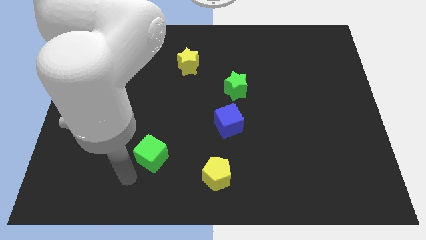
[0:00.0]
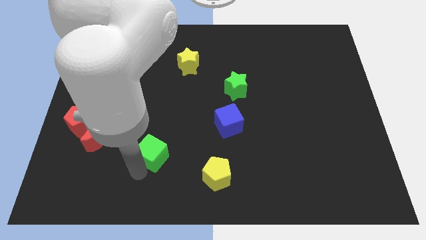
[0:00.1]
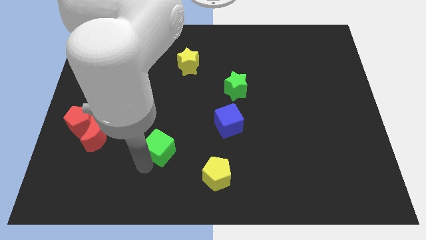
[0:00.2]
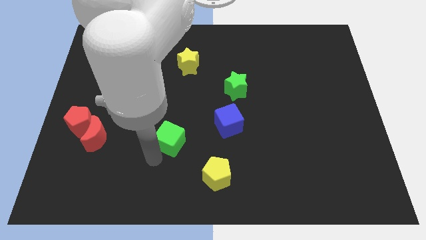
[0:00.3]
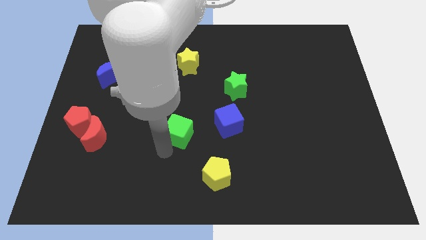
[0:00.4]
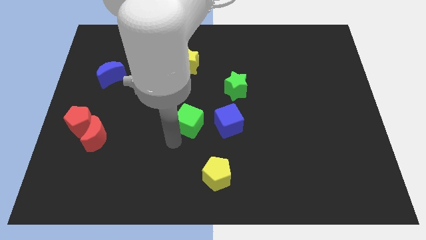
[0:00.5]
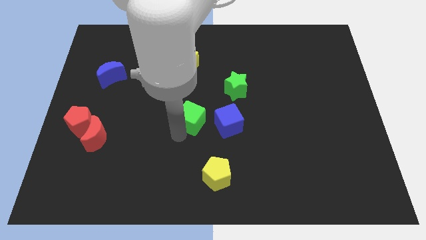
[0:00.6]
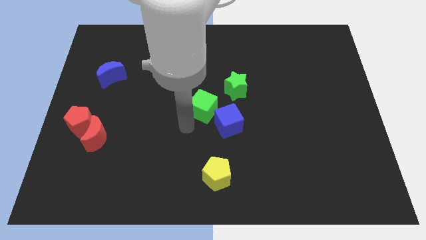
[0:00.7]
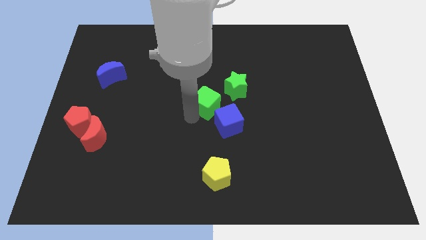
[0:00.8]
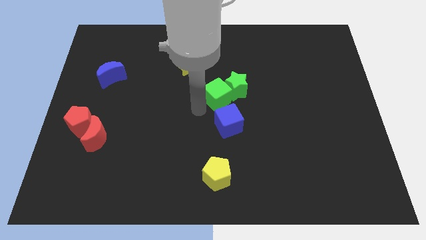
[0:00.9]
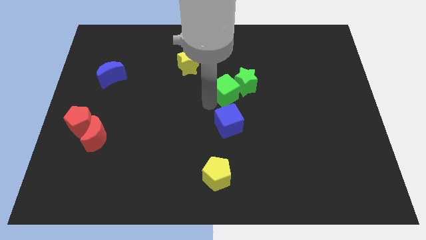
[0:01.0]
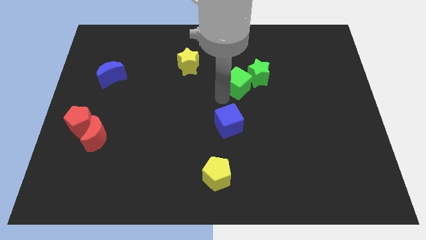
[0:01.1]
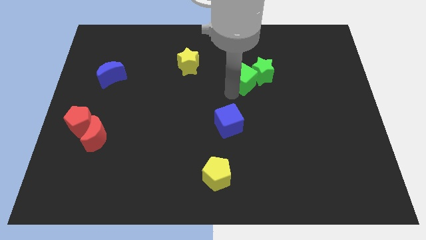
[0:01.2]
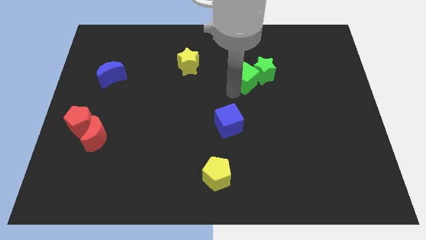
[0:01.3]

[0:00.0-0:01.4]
move the green cube into the green star

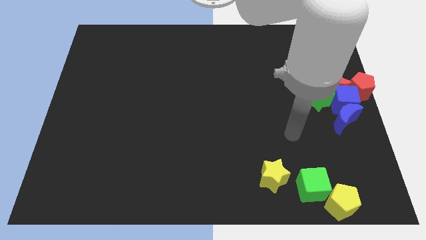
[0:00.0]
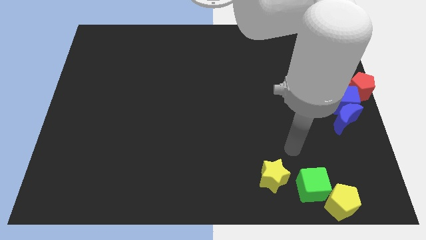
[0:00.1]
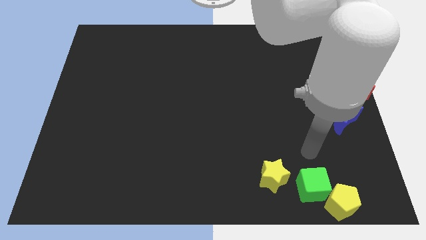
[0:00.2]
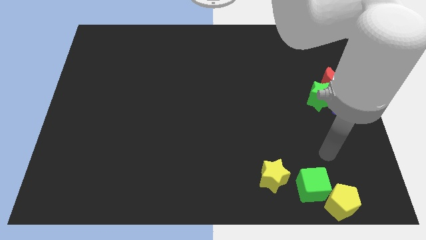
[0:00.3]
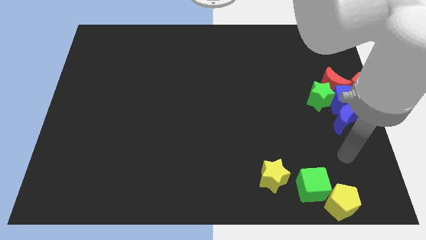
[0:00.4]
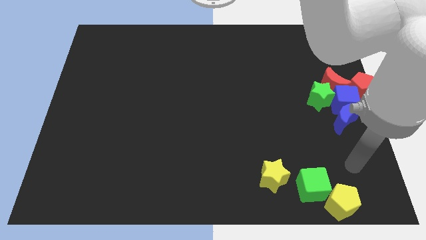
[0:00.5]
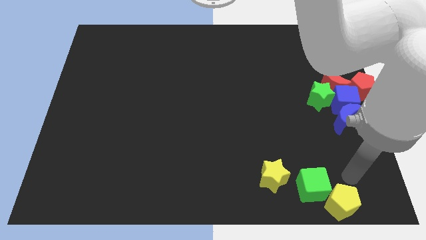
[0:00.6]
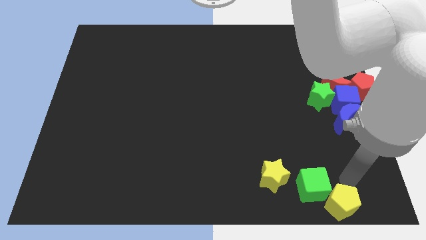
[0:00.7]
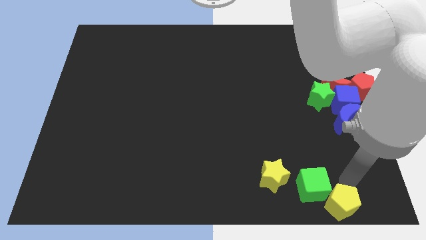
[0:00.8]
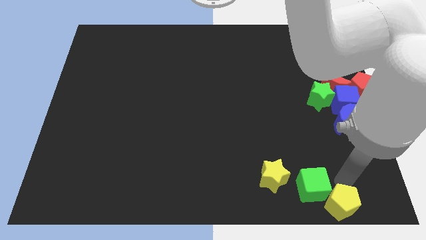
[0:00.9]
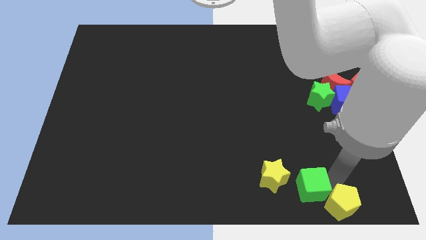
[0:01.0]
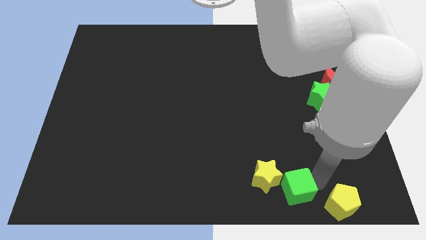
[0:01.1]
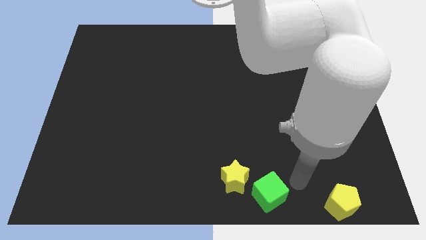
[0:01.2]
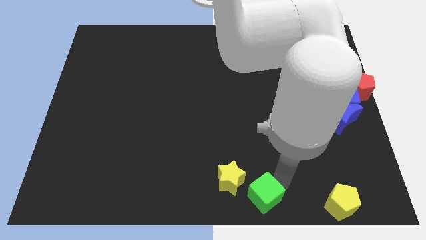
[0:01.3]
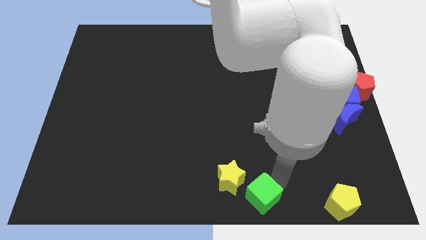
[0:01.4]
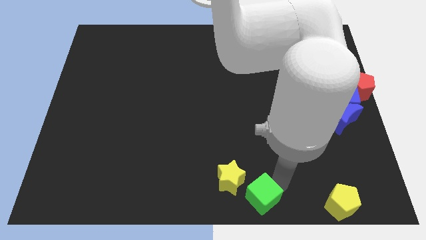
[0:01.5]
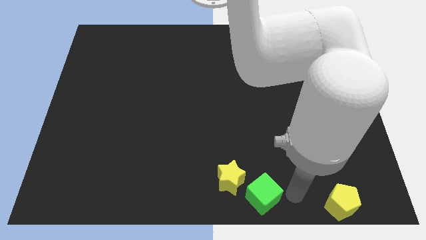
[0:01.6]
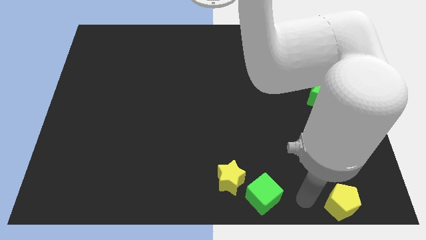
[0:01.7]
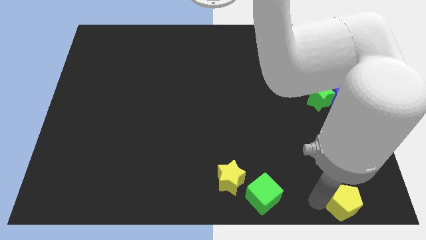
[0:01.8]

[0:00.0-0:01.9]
slide the green cube slightly to the left

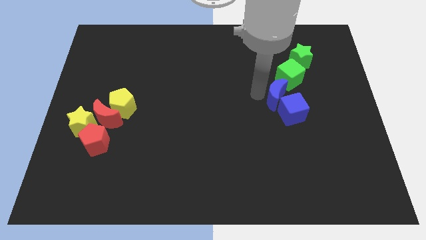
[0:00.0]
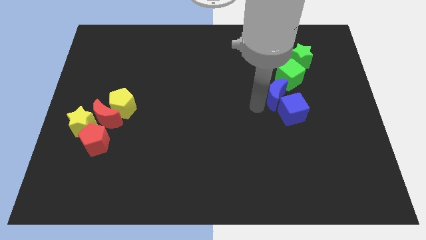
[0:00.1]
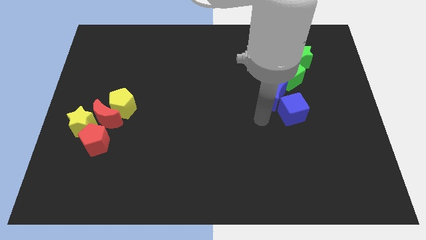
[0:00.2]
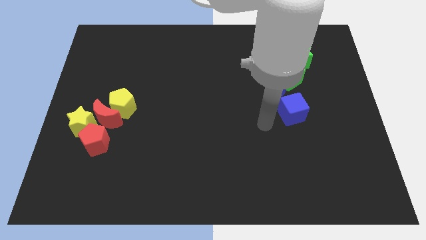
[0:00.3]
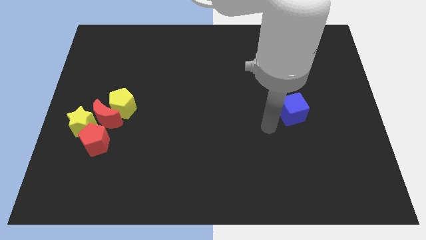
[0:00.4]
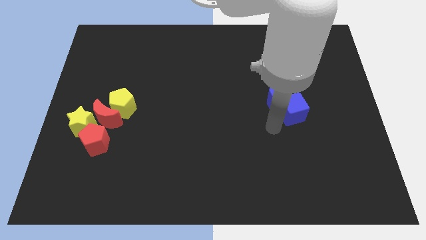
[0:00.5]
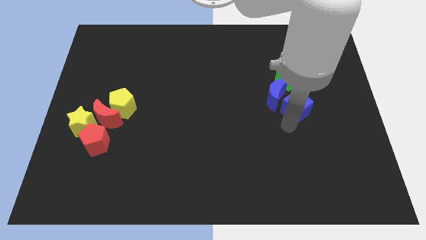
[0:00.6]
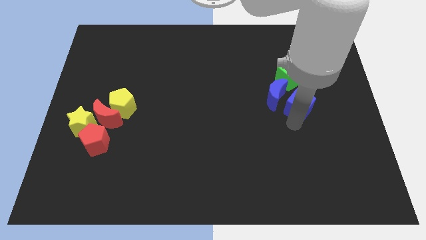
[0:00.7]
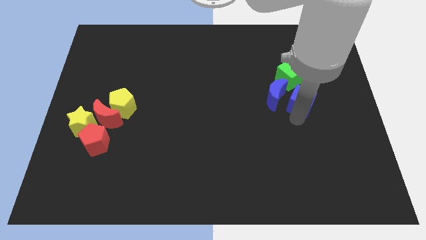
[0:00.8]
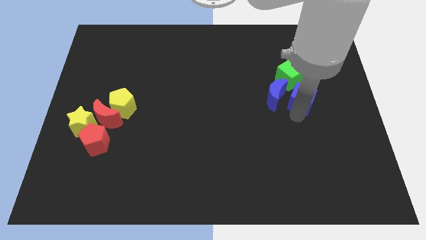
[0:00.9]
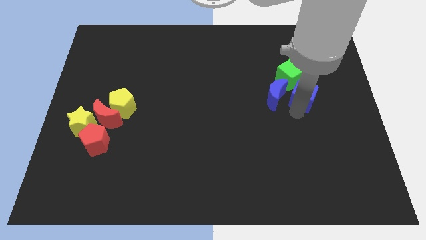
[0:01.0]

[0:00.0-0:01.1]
move the blue cube neat to the green cube

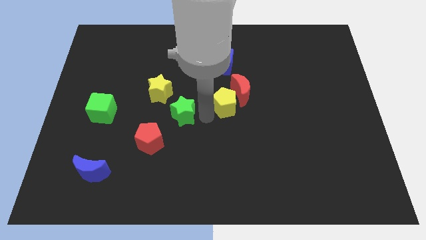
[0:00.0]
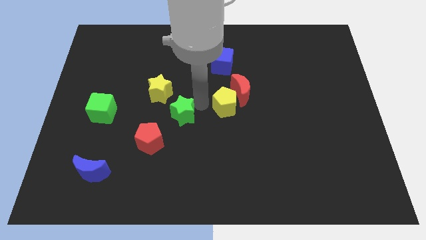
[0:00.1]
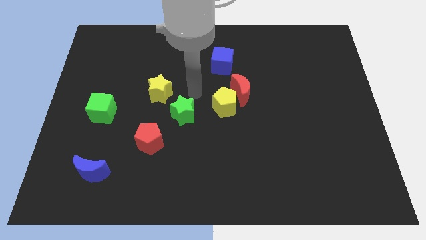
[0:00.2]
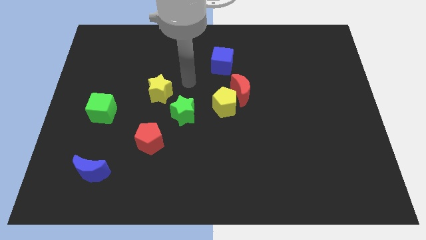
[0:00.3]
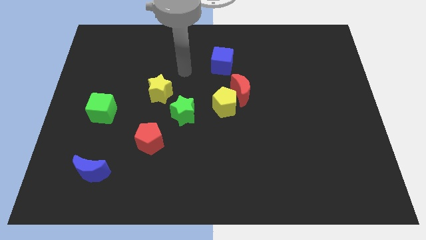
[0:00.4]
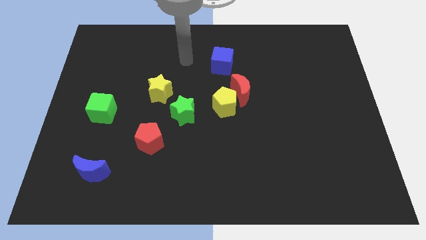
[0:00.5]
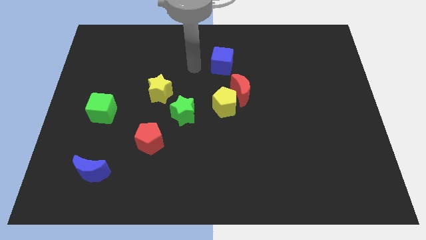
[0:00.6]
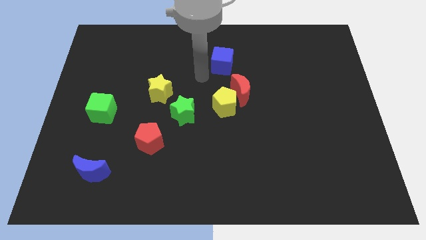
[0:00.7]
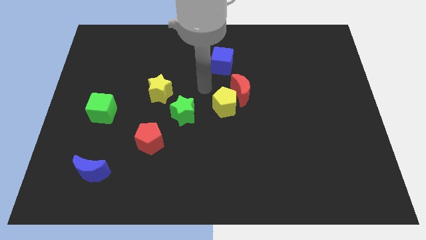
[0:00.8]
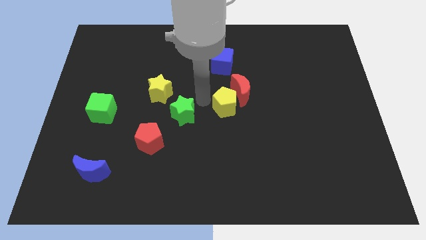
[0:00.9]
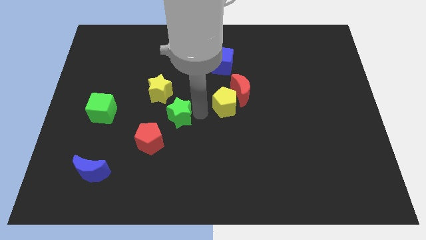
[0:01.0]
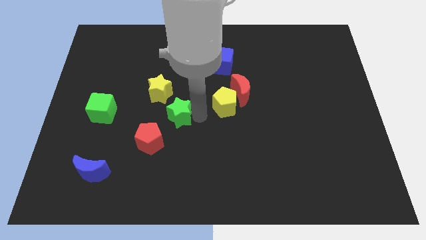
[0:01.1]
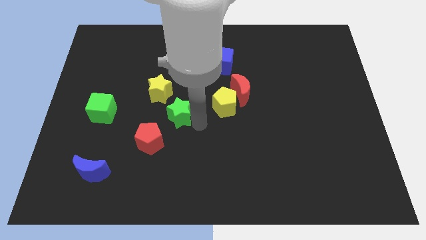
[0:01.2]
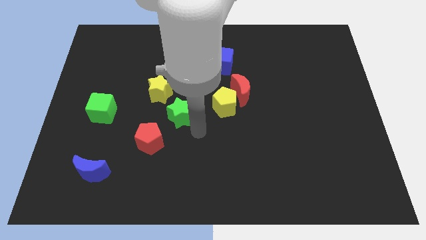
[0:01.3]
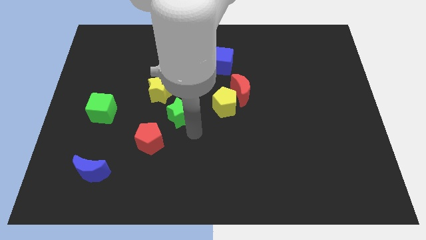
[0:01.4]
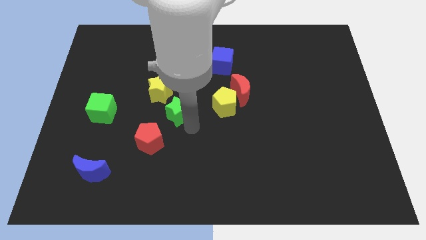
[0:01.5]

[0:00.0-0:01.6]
place your arm below green star

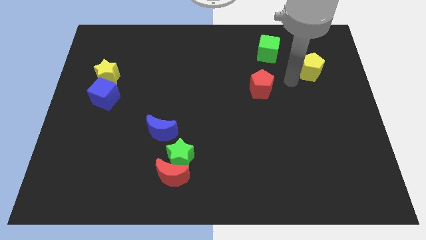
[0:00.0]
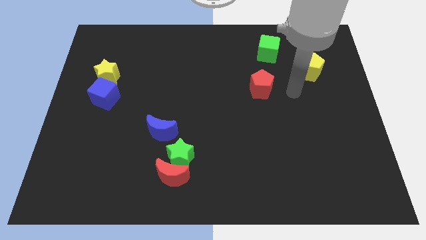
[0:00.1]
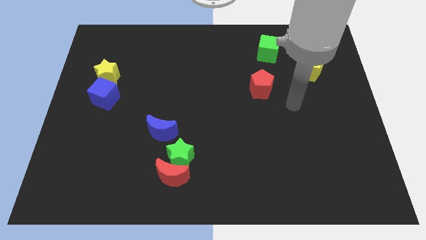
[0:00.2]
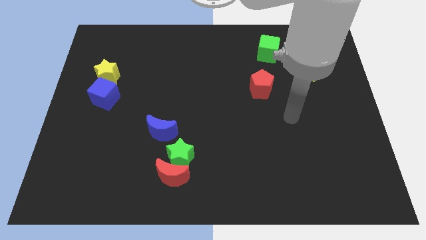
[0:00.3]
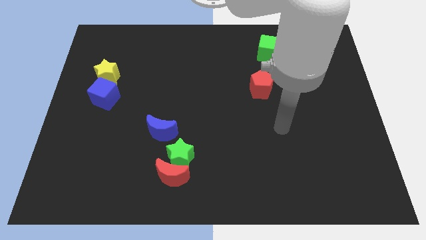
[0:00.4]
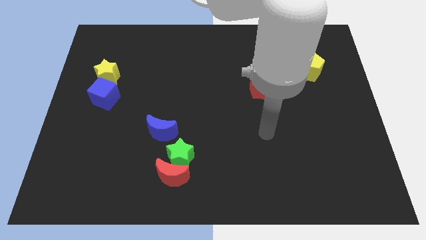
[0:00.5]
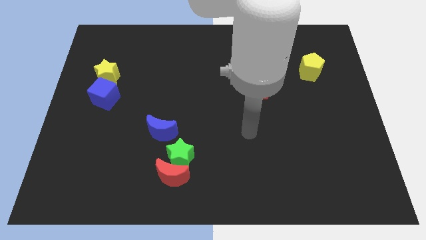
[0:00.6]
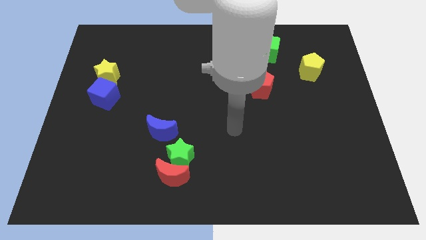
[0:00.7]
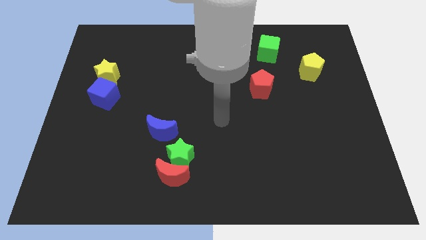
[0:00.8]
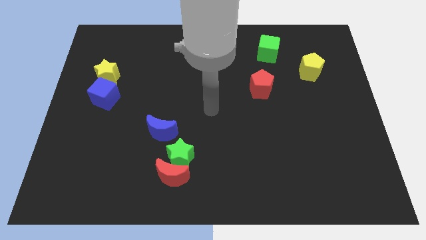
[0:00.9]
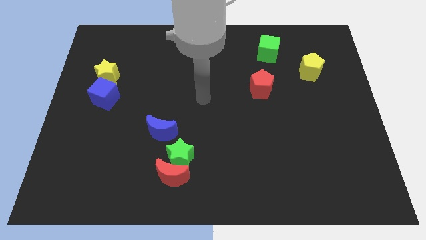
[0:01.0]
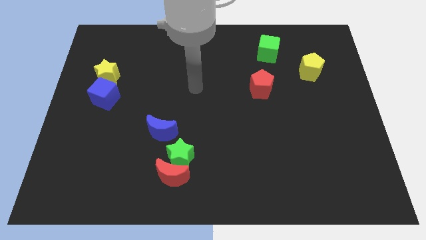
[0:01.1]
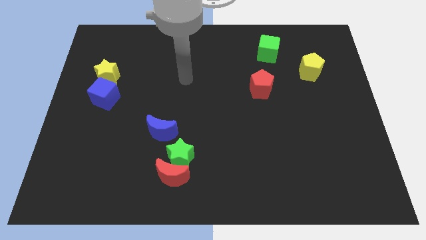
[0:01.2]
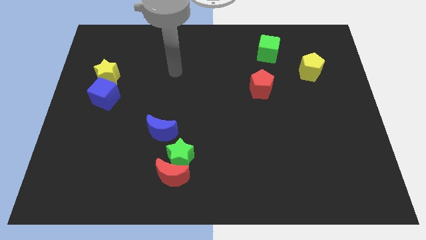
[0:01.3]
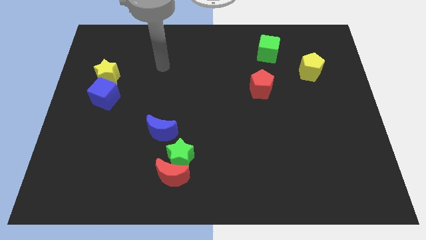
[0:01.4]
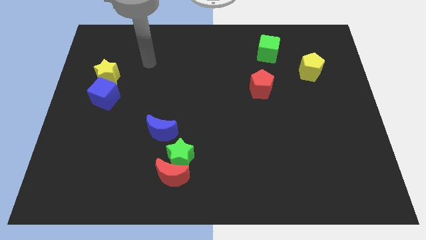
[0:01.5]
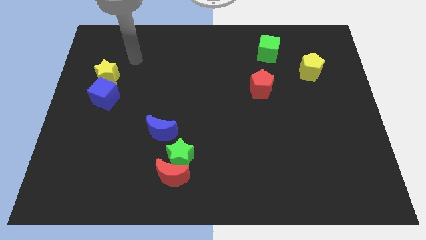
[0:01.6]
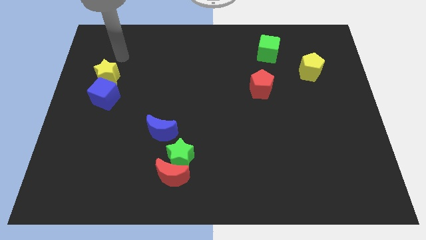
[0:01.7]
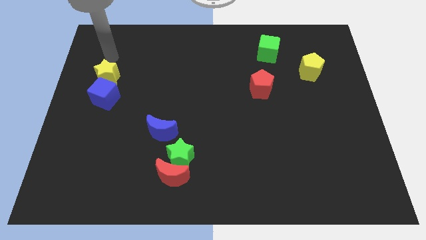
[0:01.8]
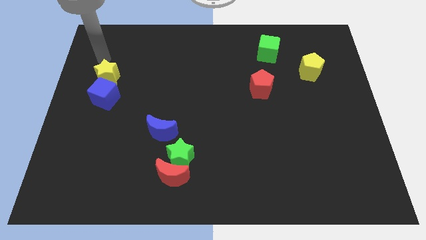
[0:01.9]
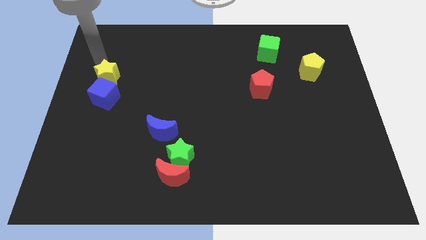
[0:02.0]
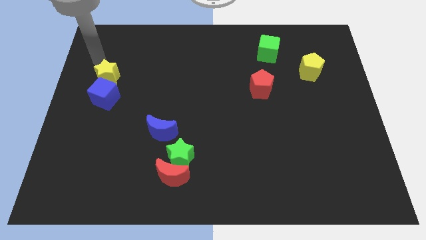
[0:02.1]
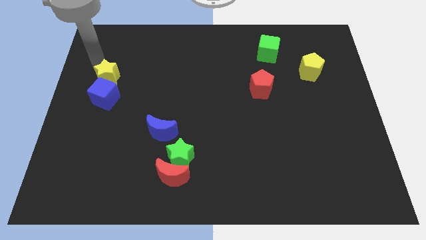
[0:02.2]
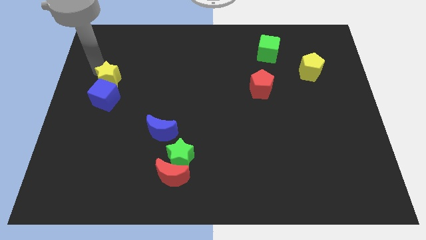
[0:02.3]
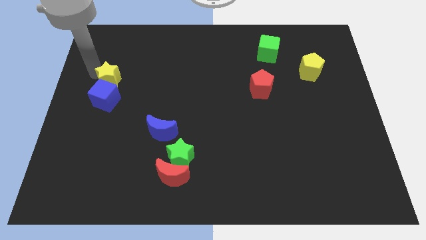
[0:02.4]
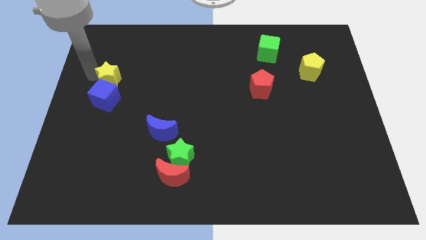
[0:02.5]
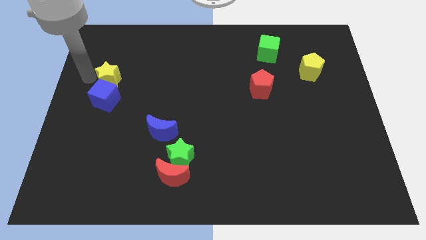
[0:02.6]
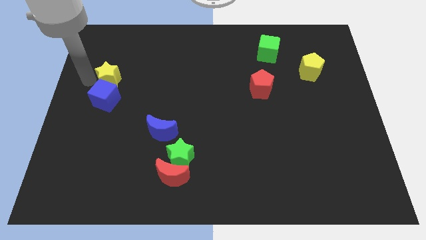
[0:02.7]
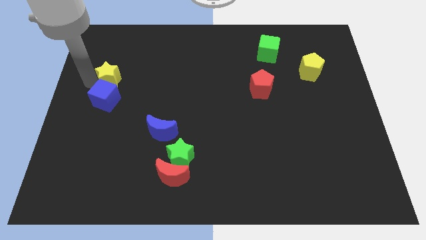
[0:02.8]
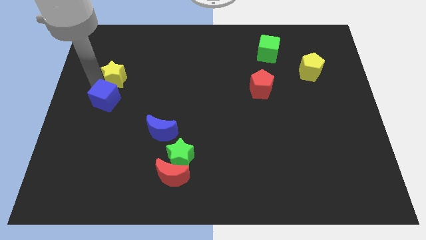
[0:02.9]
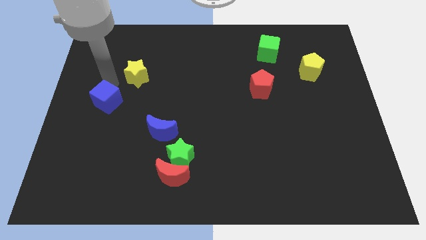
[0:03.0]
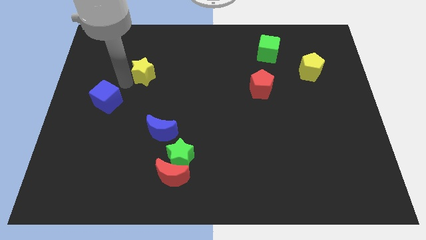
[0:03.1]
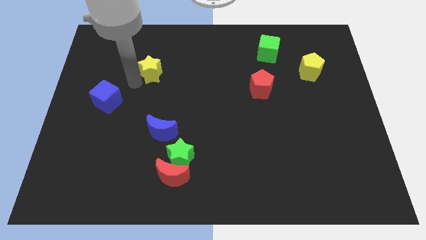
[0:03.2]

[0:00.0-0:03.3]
move the yellow star to the top right of the blue cube
